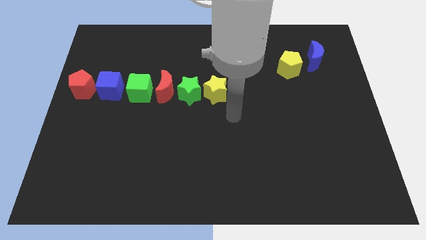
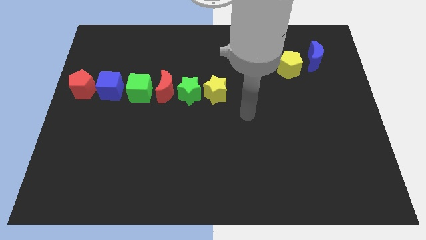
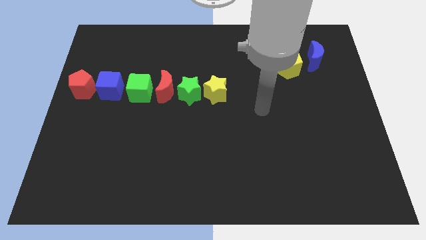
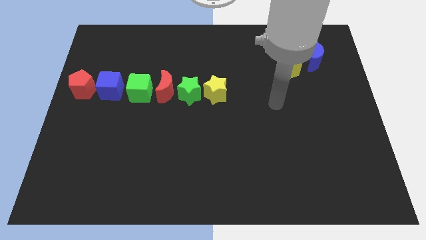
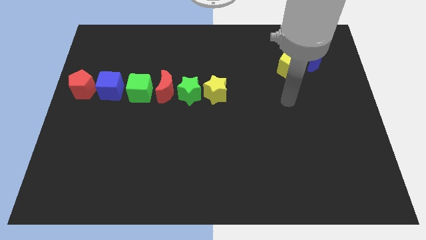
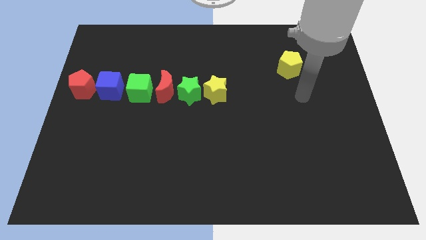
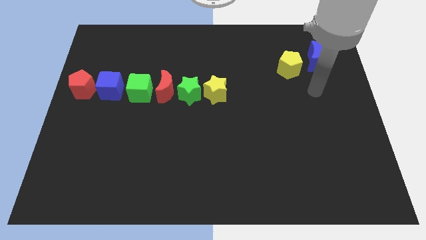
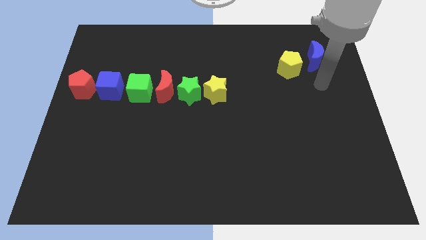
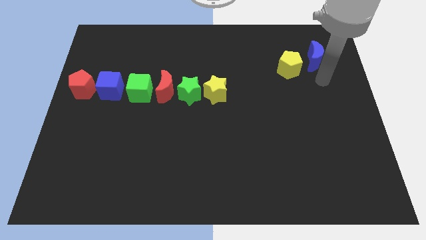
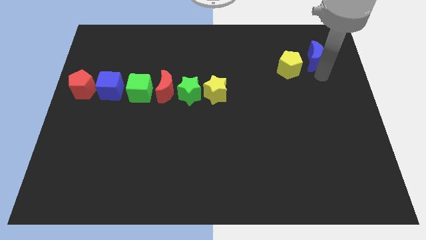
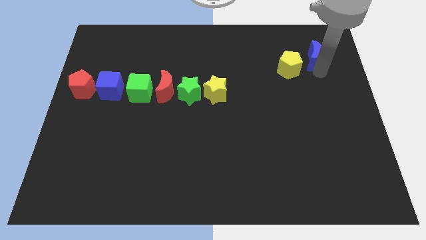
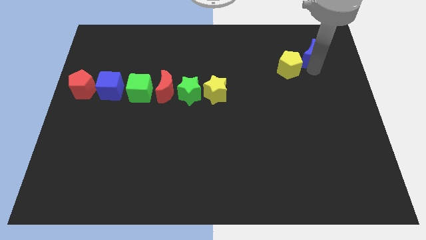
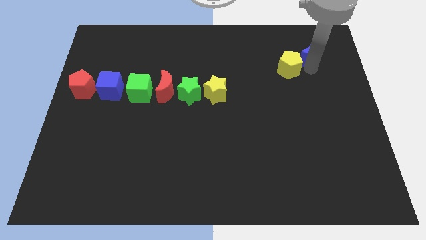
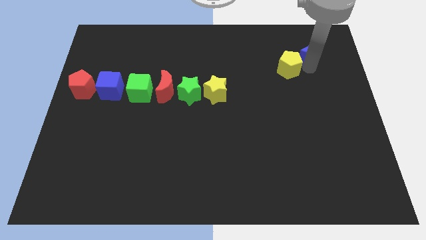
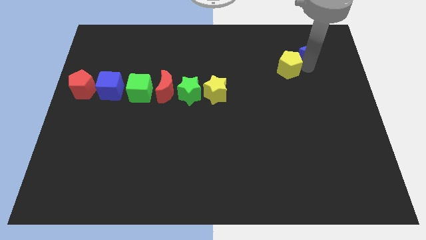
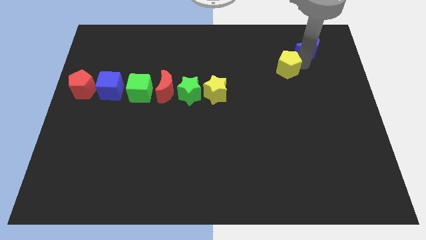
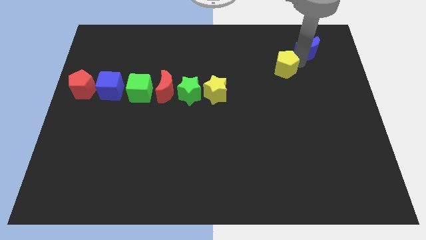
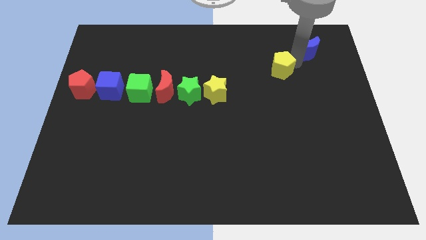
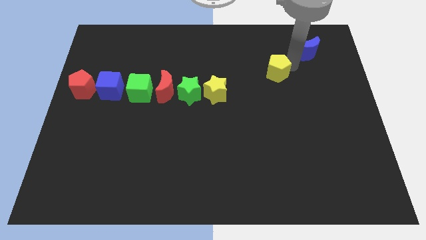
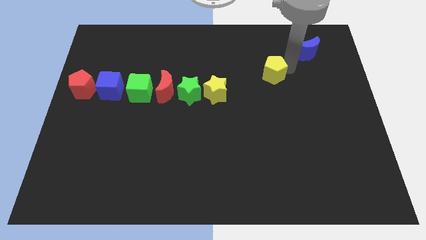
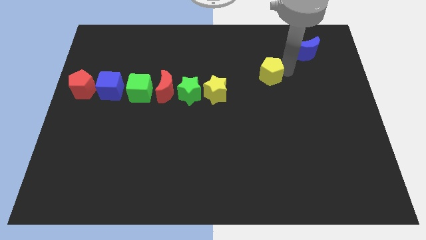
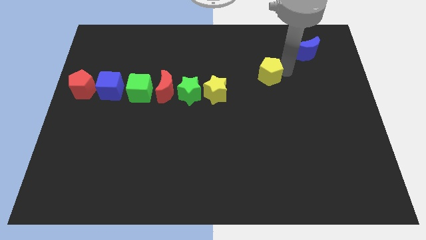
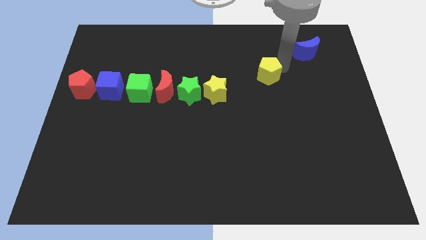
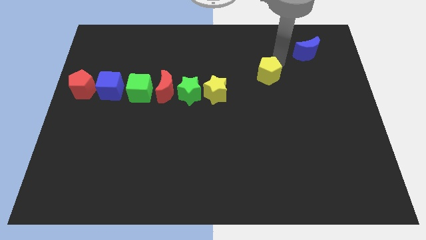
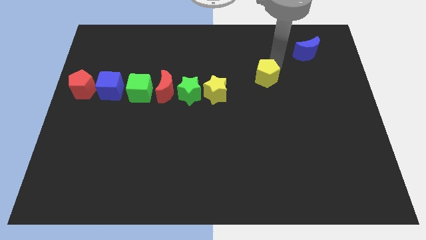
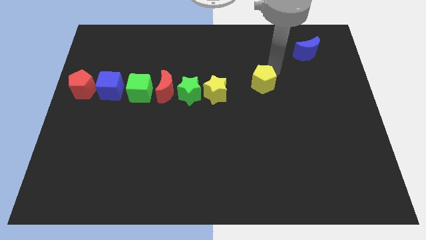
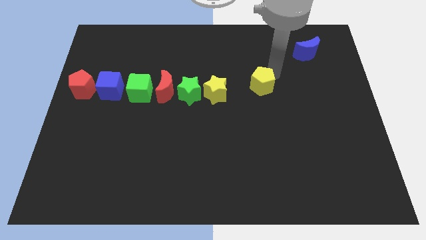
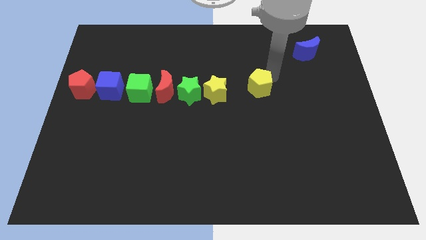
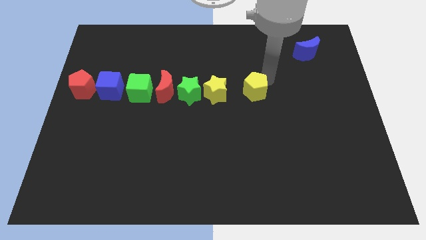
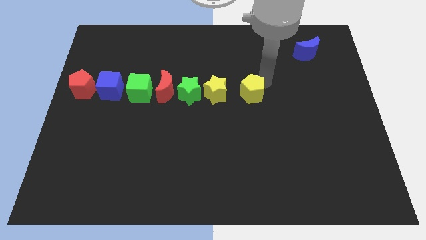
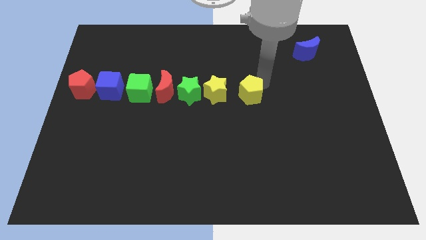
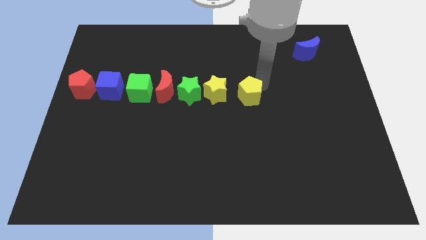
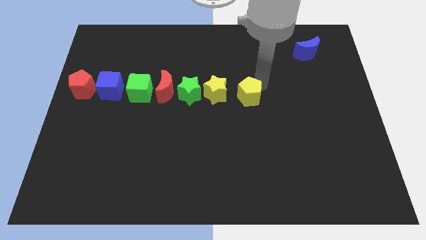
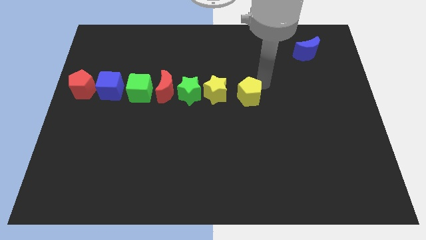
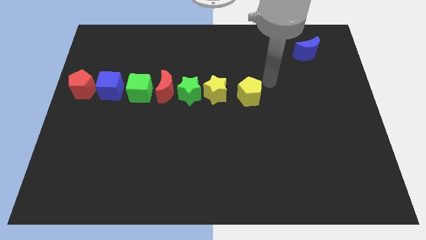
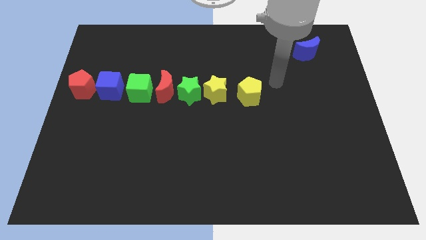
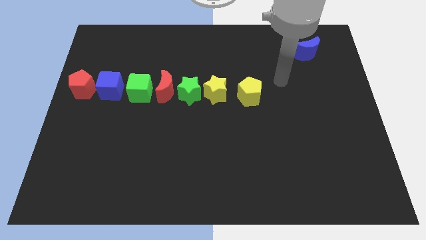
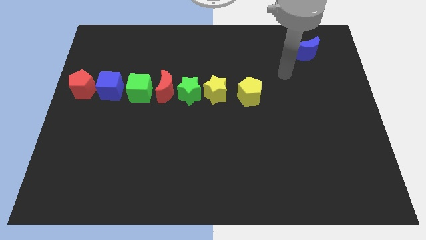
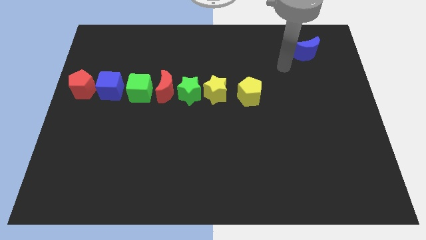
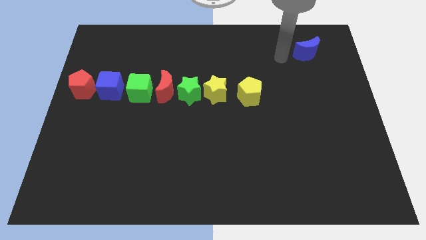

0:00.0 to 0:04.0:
place the yellow pentagon to the right of the yellow star

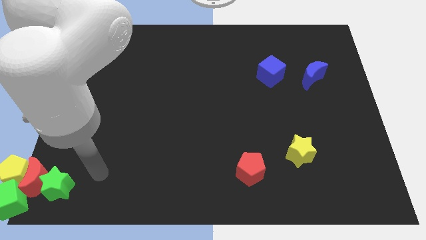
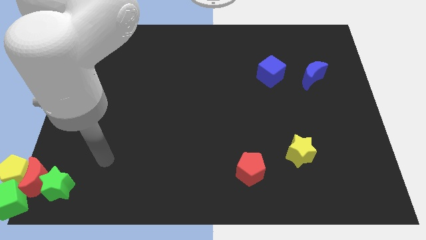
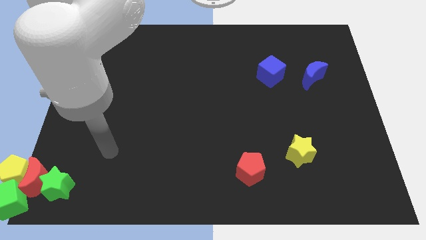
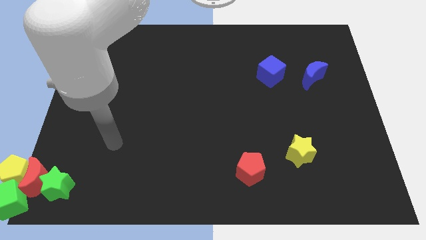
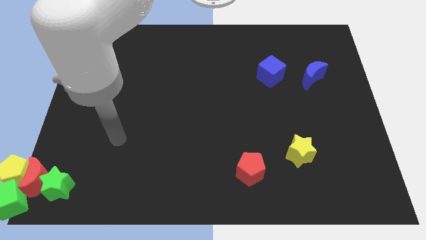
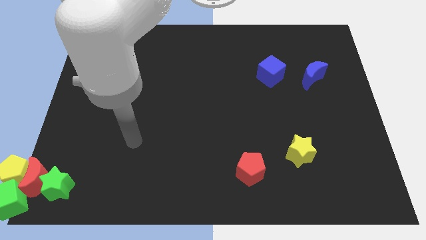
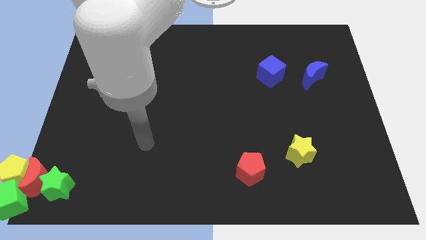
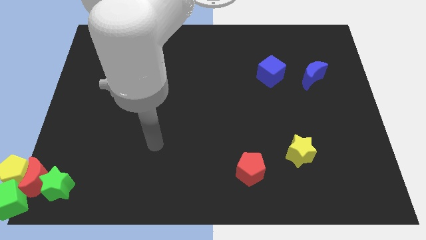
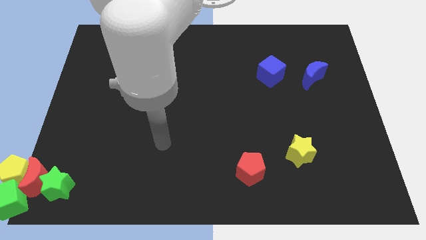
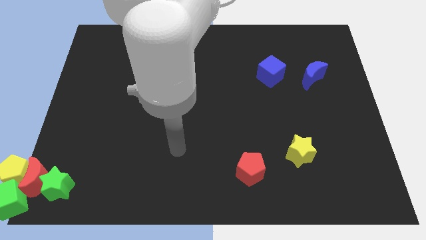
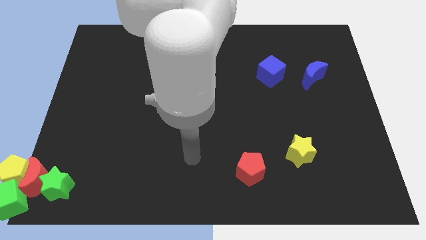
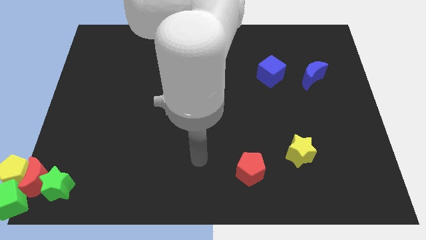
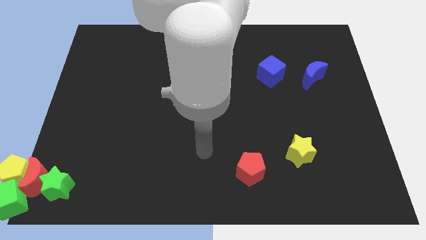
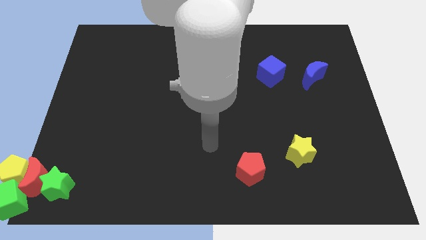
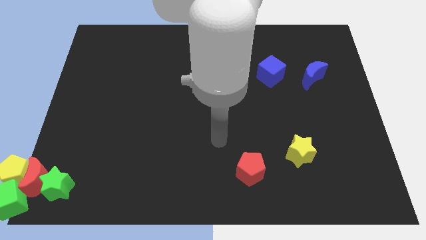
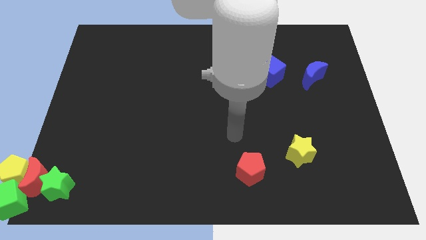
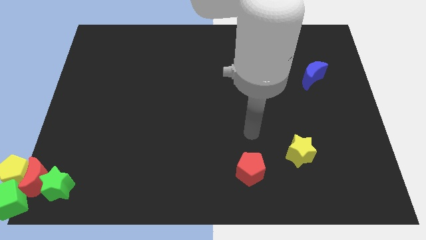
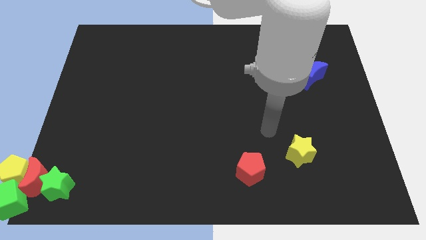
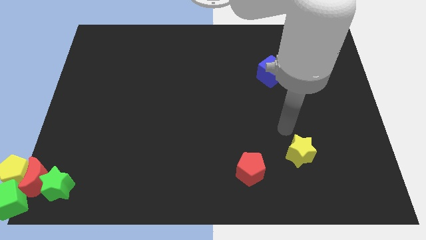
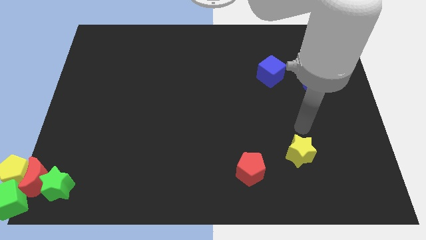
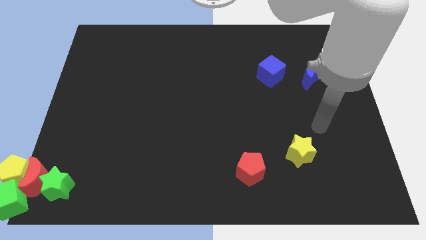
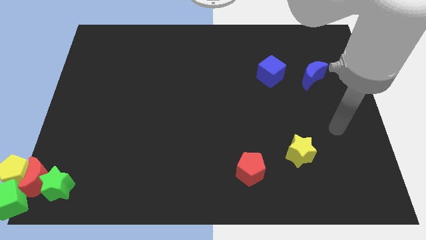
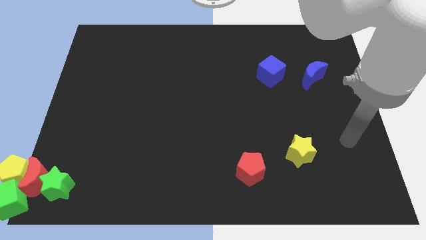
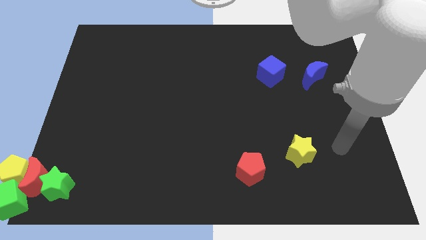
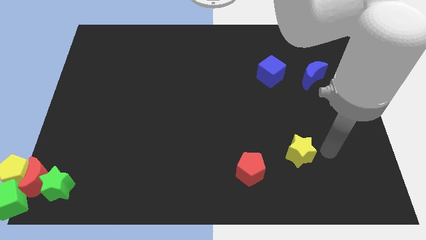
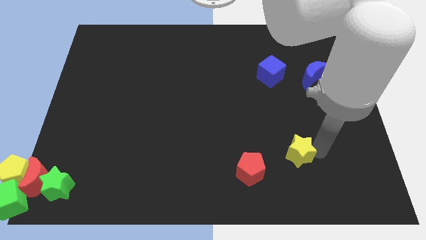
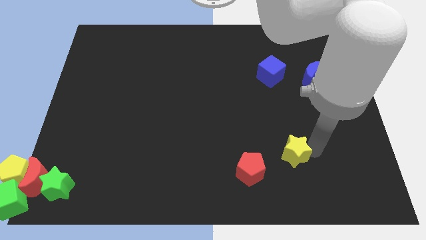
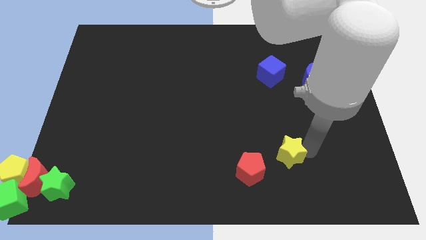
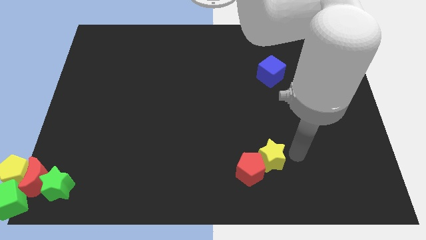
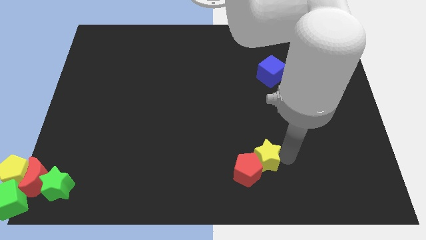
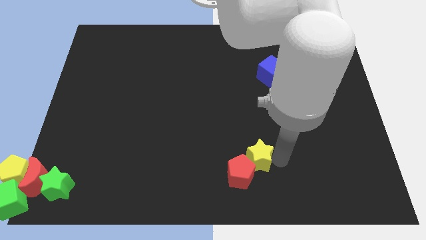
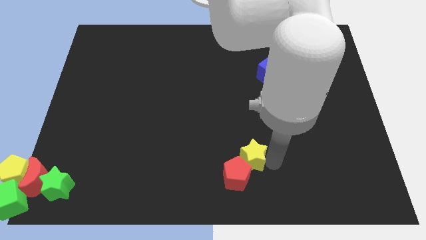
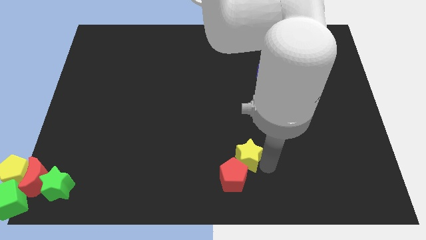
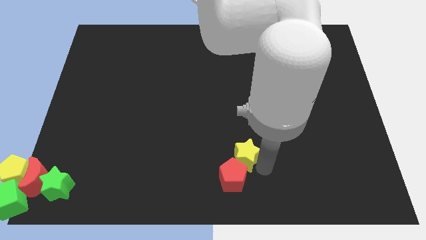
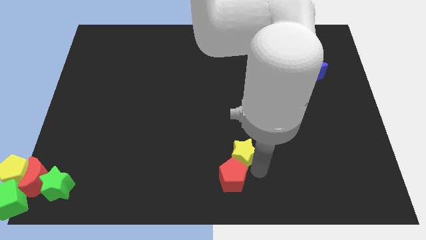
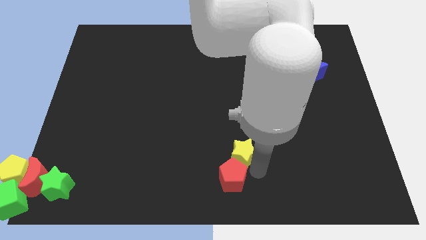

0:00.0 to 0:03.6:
push the yellow star into the top right side of the red pentagon

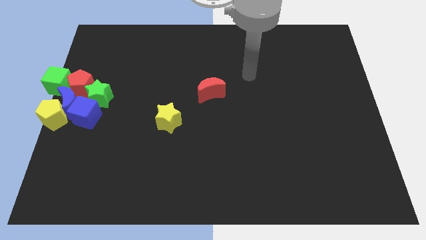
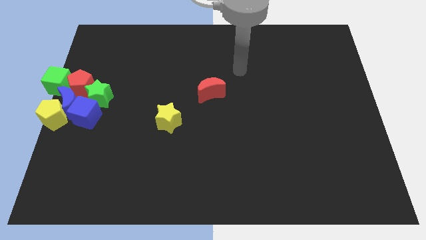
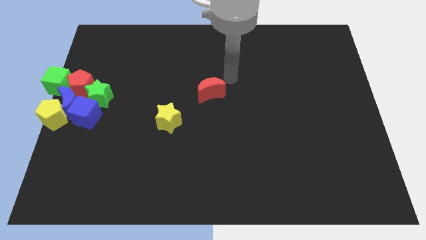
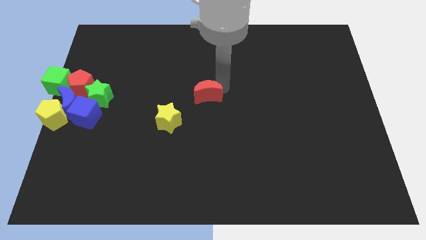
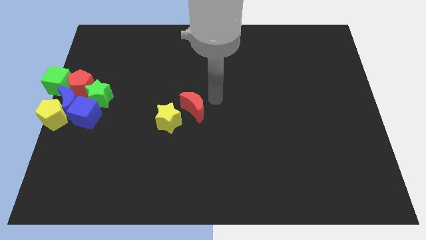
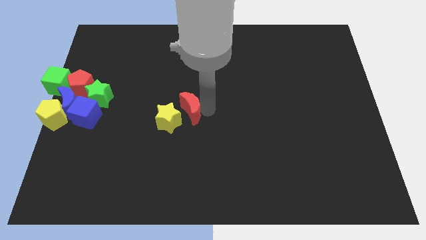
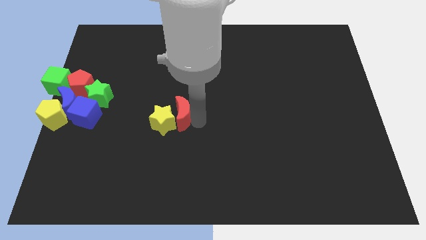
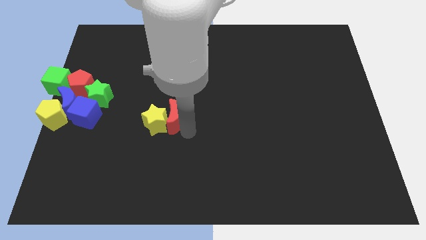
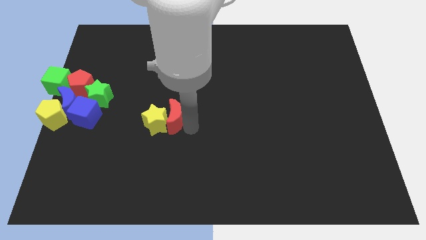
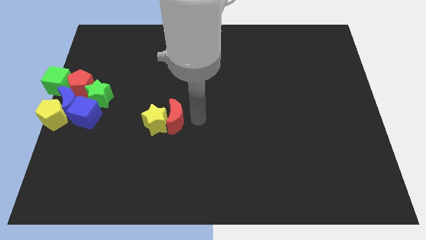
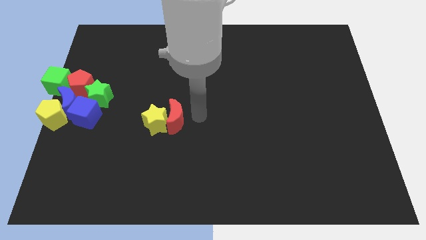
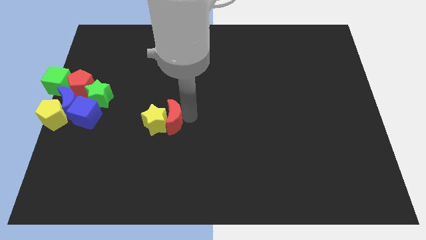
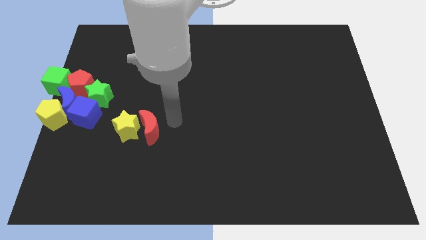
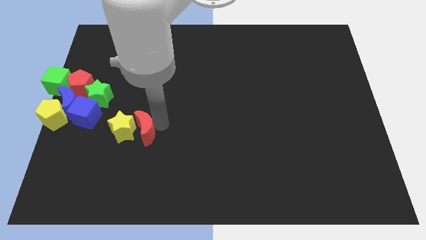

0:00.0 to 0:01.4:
push the red crescent into the yellow star towards the blue cube
